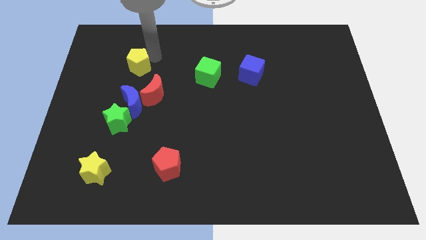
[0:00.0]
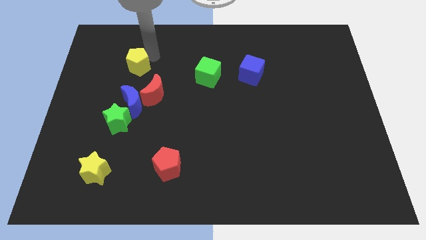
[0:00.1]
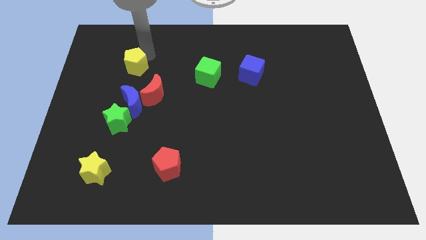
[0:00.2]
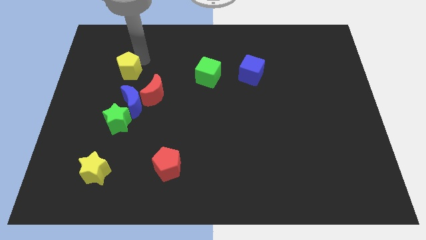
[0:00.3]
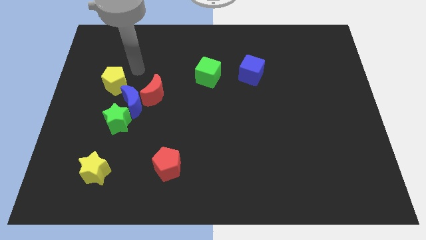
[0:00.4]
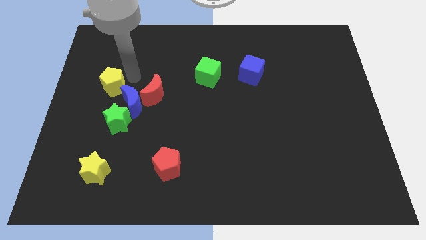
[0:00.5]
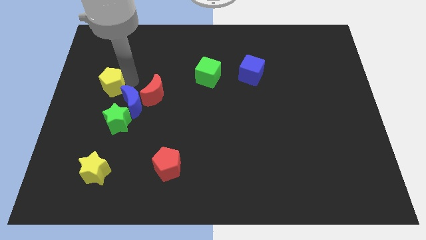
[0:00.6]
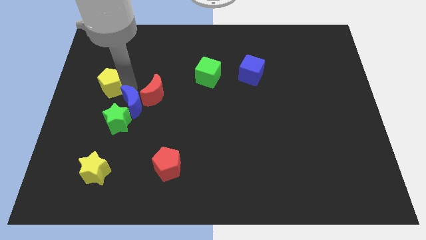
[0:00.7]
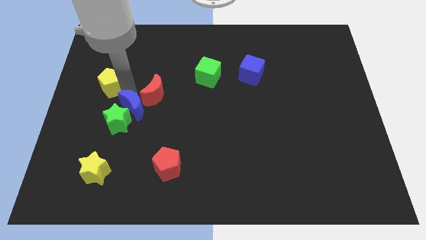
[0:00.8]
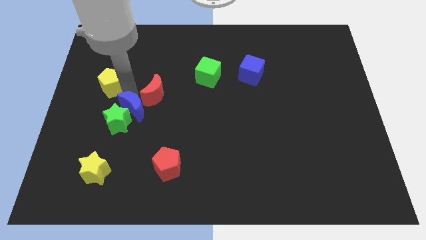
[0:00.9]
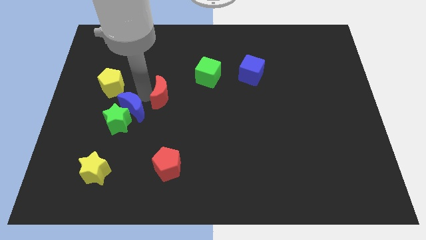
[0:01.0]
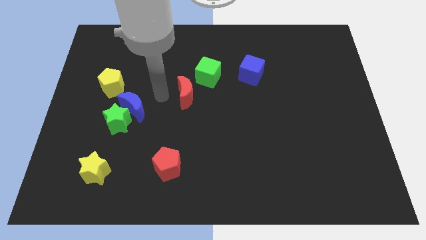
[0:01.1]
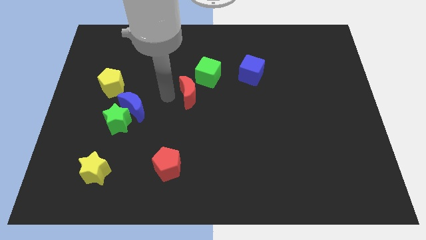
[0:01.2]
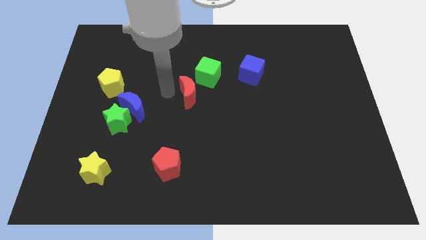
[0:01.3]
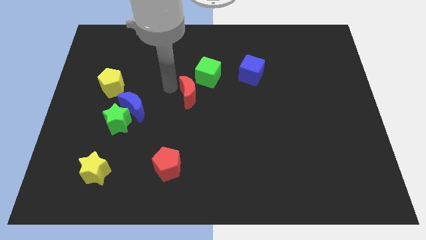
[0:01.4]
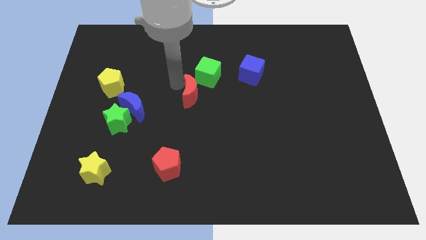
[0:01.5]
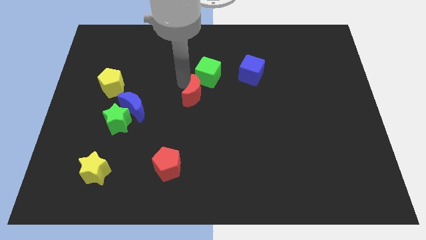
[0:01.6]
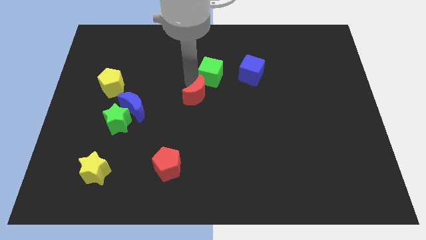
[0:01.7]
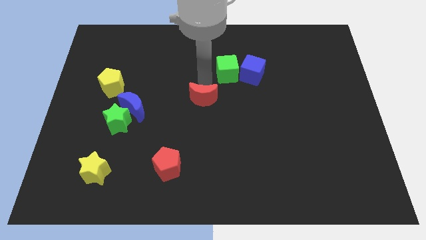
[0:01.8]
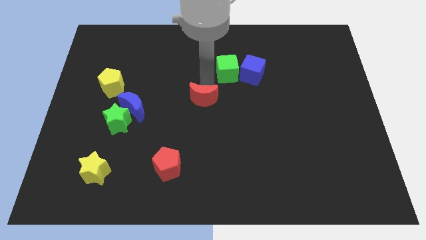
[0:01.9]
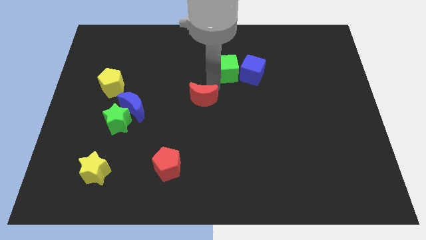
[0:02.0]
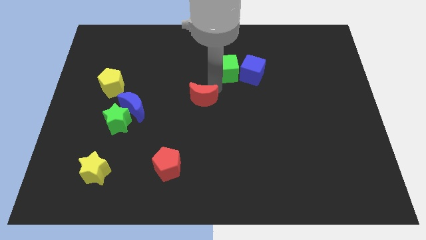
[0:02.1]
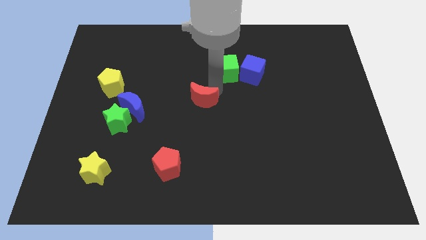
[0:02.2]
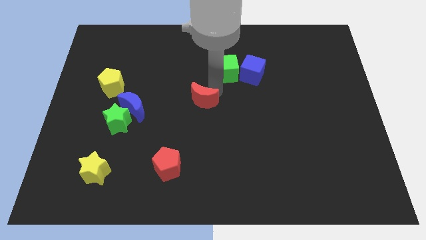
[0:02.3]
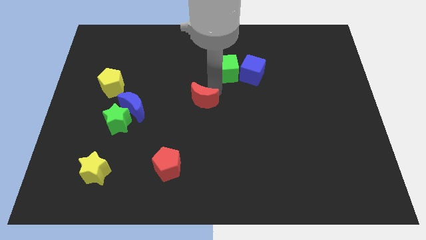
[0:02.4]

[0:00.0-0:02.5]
move the red moon to the center side

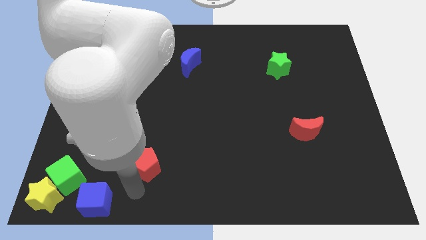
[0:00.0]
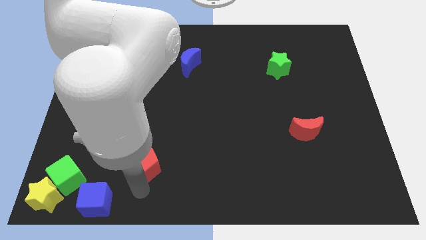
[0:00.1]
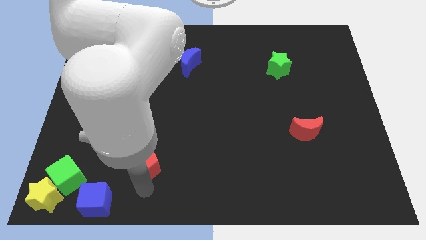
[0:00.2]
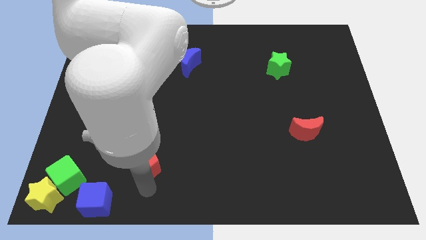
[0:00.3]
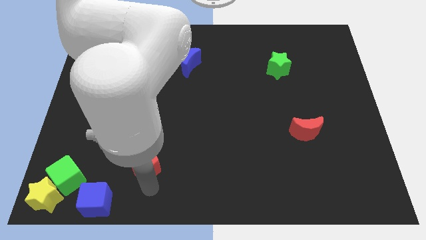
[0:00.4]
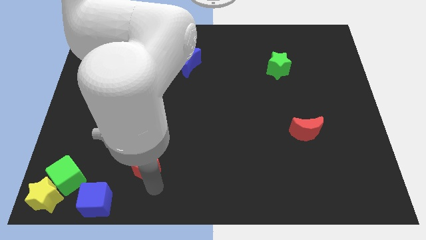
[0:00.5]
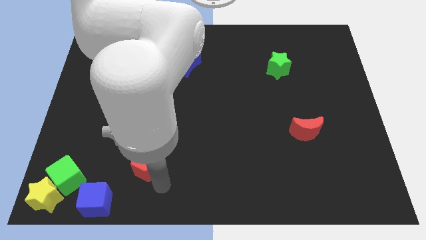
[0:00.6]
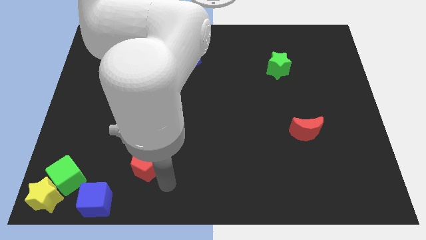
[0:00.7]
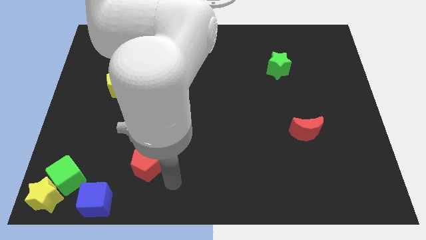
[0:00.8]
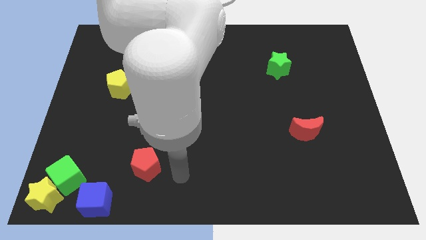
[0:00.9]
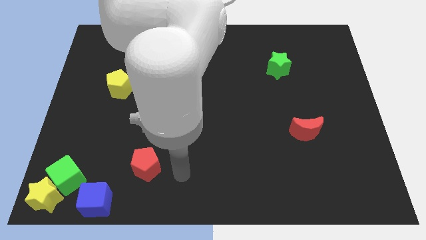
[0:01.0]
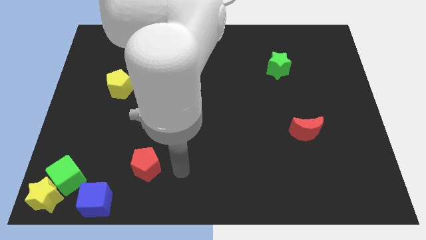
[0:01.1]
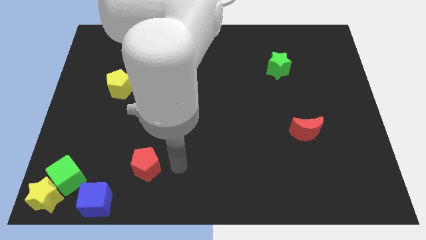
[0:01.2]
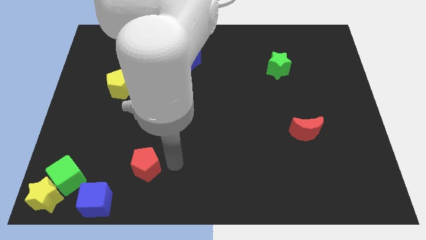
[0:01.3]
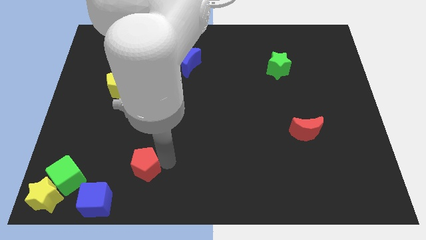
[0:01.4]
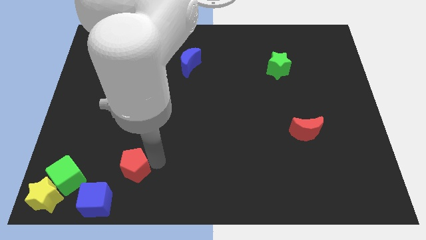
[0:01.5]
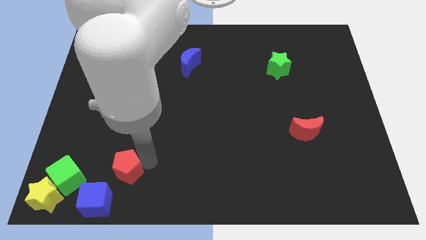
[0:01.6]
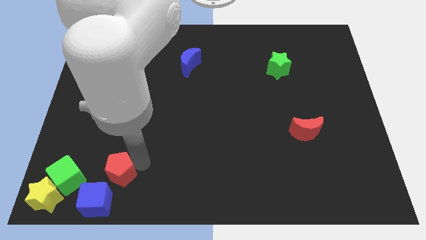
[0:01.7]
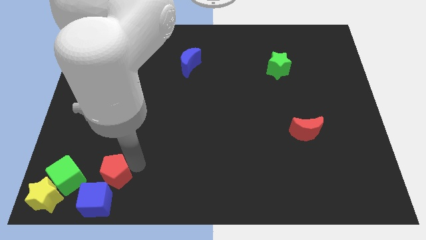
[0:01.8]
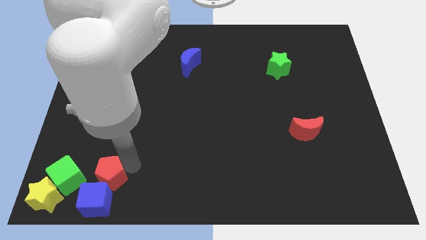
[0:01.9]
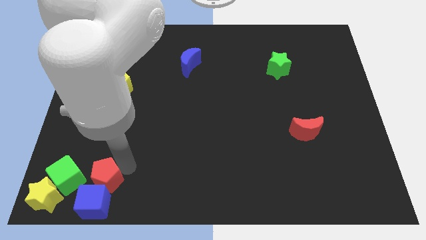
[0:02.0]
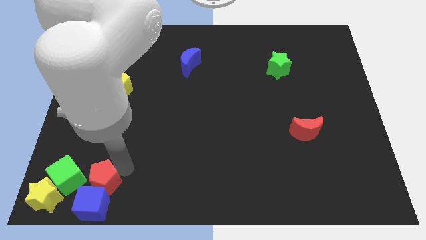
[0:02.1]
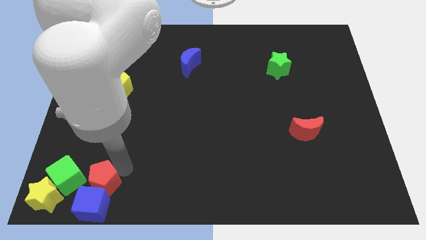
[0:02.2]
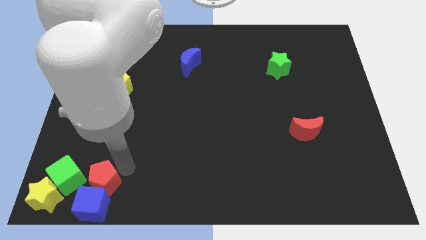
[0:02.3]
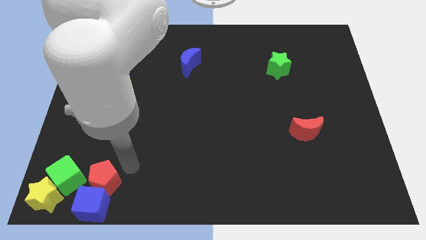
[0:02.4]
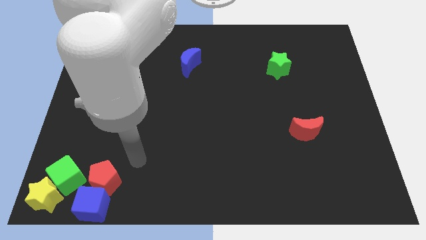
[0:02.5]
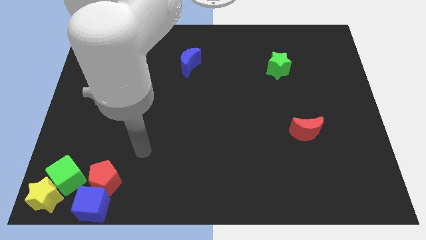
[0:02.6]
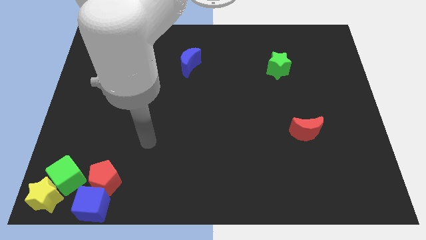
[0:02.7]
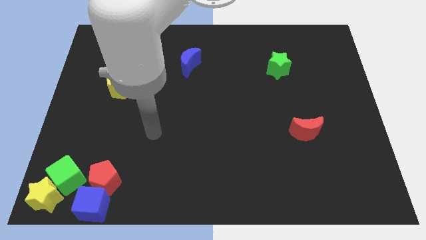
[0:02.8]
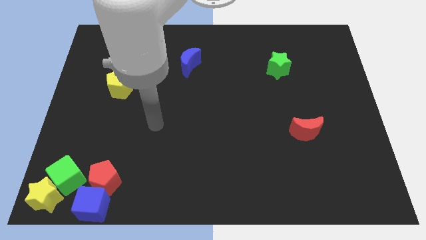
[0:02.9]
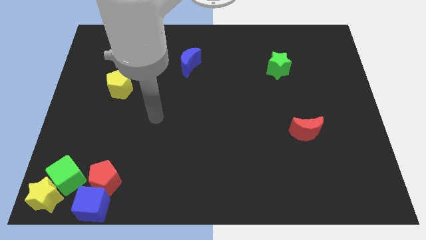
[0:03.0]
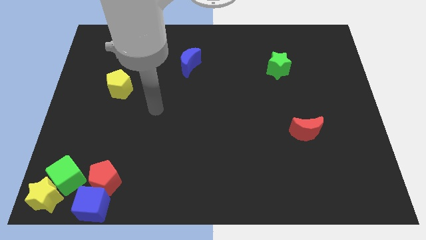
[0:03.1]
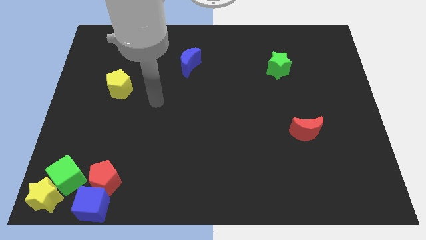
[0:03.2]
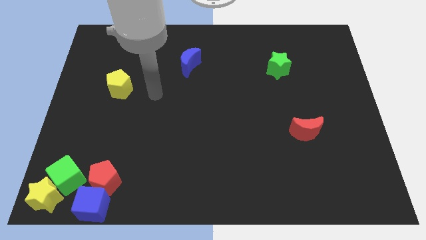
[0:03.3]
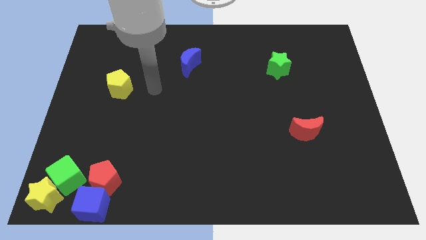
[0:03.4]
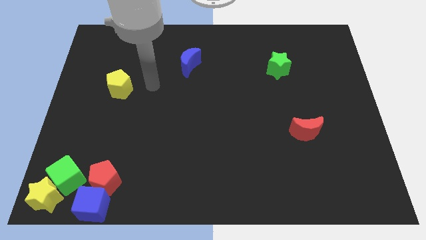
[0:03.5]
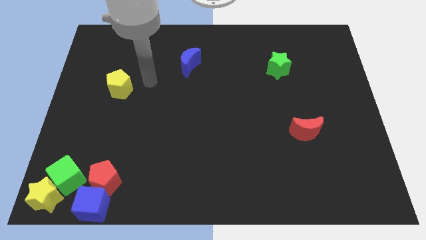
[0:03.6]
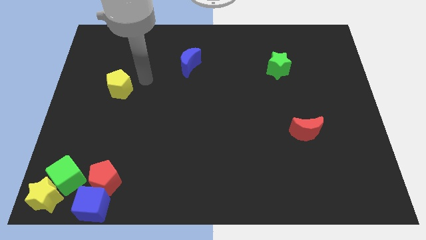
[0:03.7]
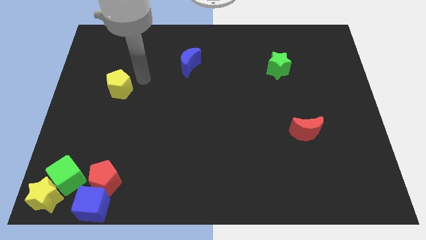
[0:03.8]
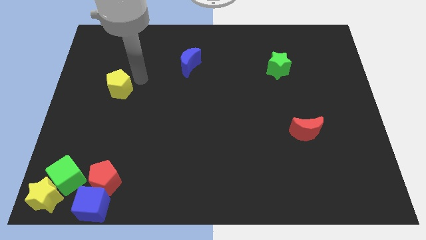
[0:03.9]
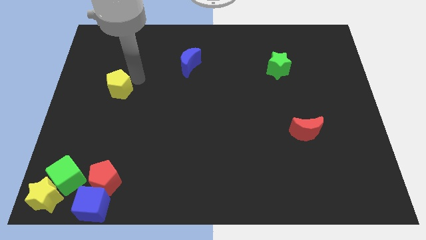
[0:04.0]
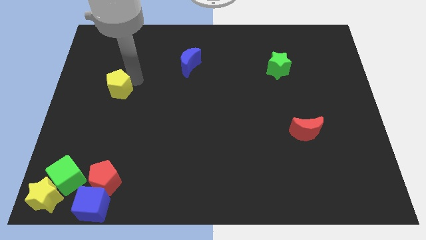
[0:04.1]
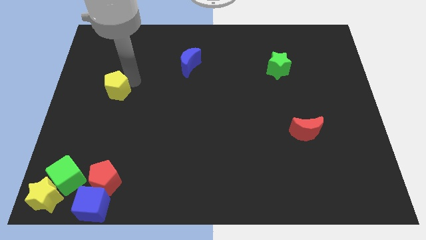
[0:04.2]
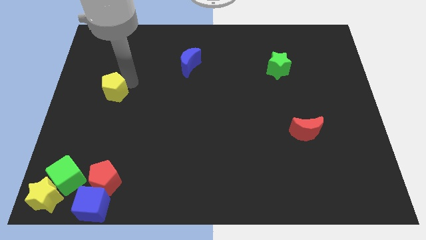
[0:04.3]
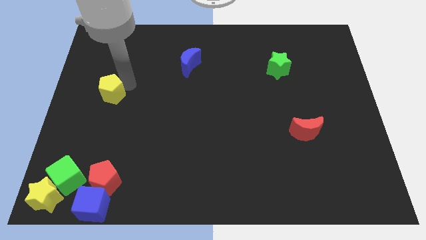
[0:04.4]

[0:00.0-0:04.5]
move the red pentagon to the top of the blue cube

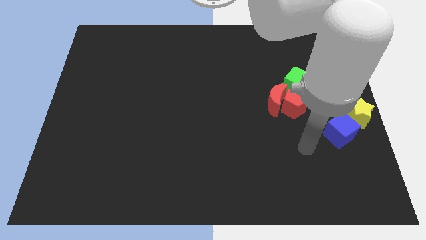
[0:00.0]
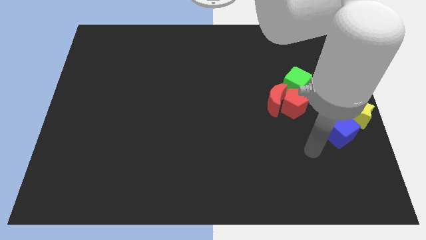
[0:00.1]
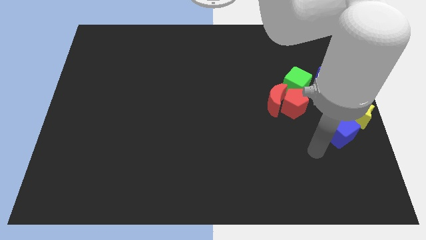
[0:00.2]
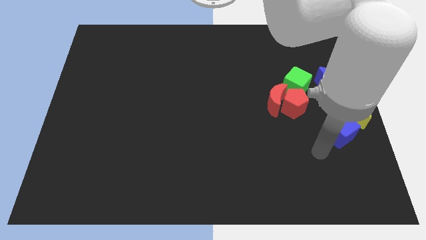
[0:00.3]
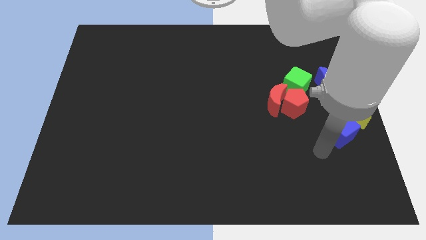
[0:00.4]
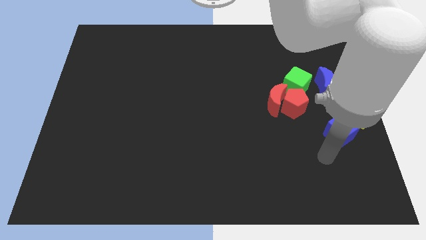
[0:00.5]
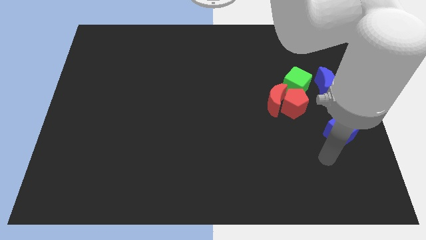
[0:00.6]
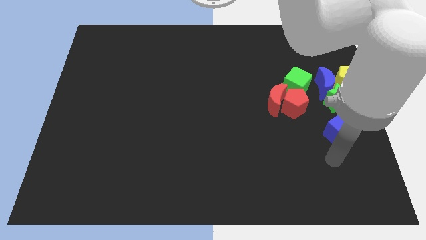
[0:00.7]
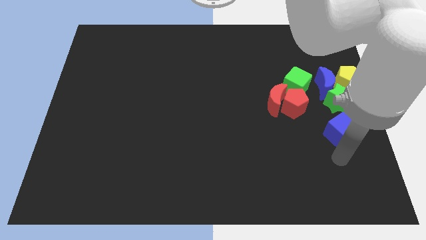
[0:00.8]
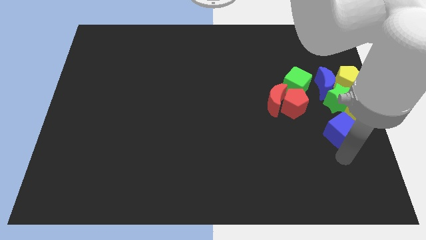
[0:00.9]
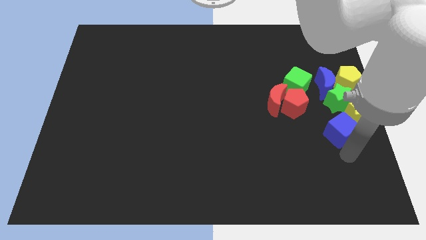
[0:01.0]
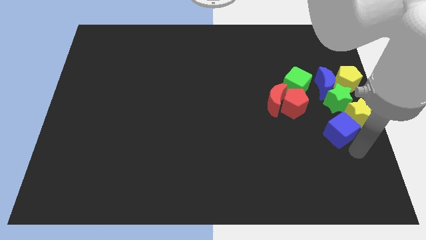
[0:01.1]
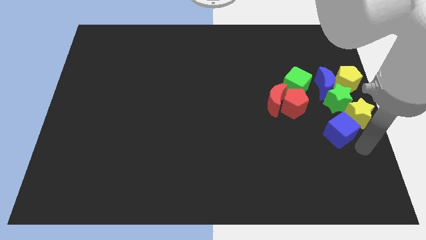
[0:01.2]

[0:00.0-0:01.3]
move the arm to the blue cube

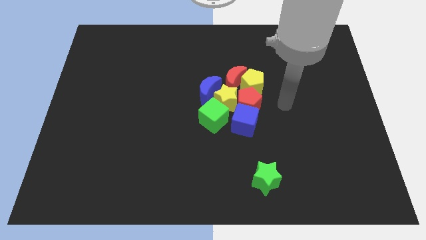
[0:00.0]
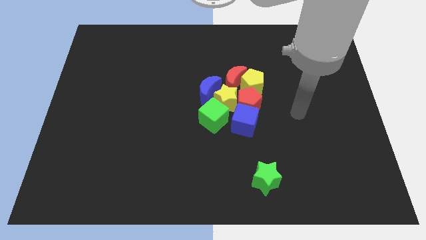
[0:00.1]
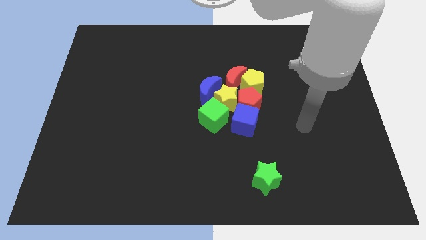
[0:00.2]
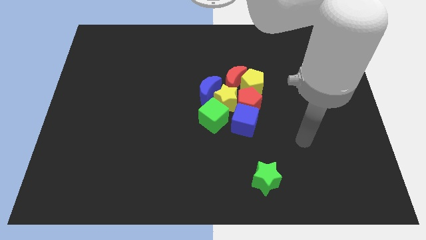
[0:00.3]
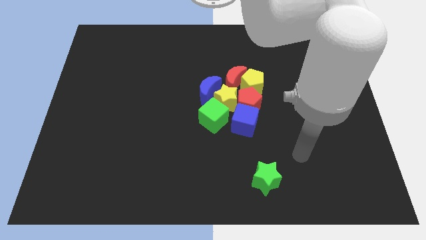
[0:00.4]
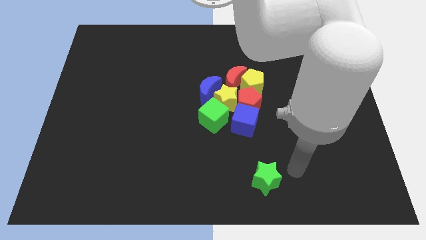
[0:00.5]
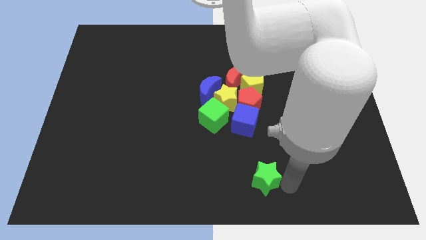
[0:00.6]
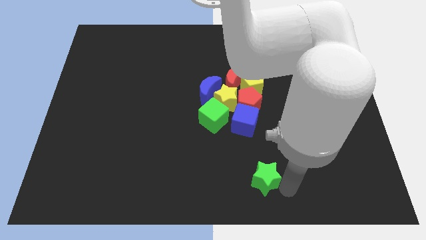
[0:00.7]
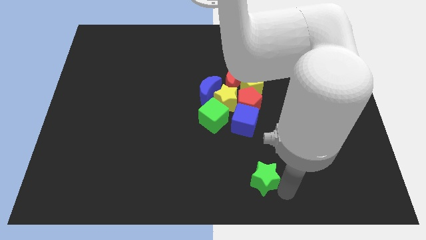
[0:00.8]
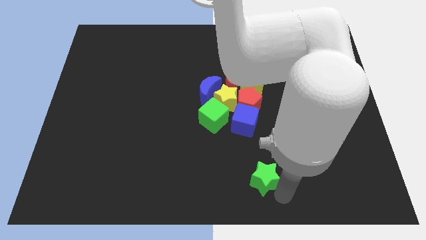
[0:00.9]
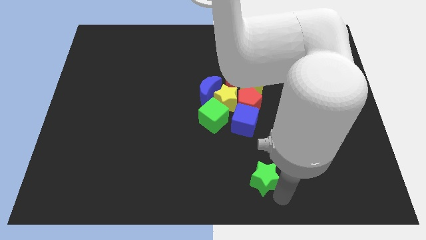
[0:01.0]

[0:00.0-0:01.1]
move your arm from group of blocks to the bottom of the green star
